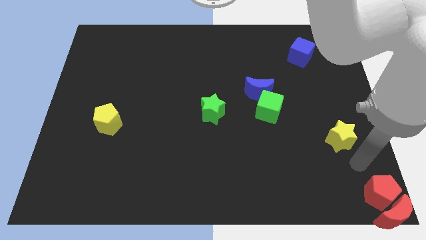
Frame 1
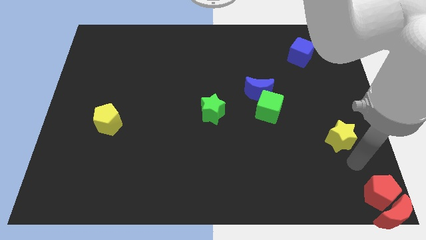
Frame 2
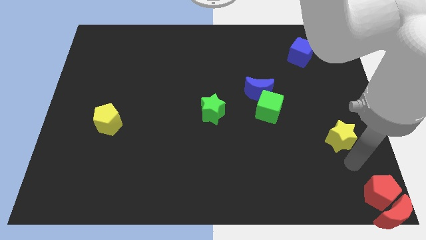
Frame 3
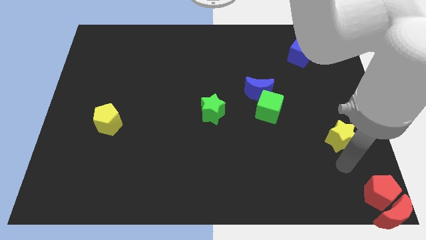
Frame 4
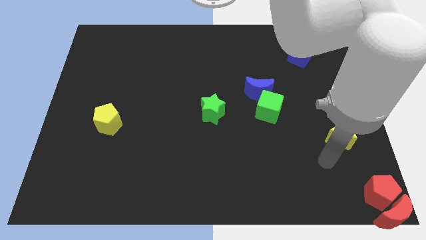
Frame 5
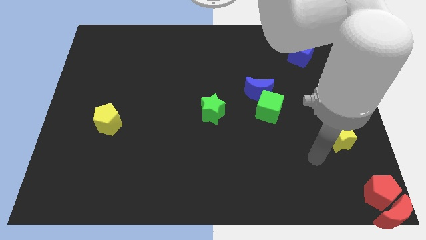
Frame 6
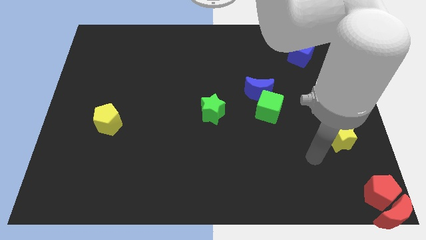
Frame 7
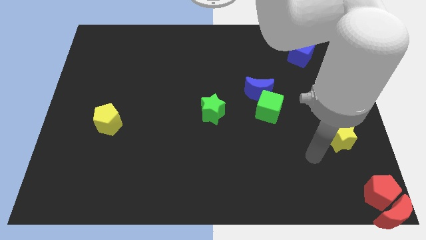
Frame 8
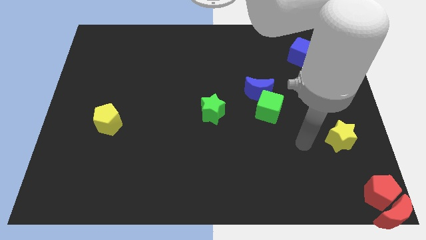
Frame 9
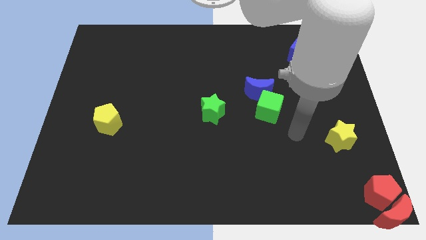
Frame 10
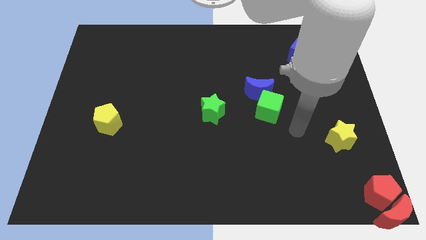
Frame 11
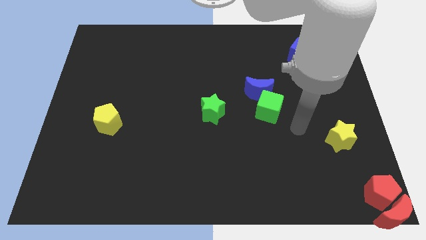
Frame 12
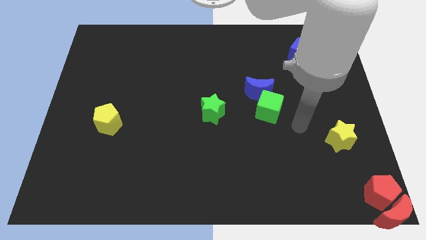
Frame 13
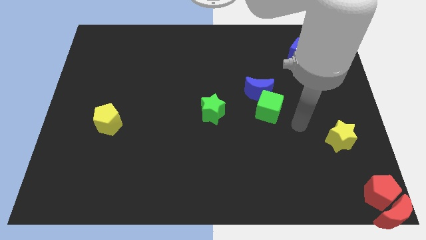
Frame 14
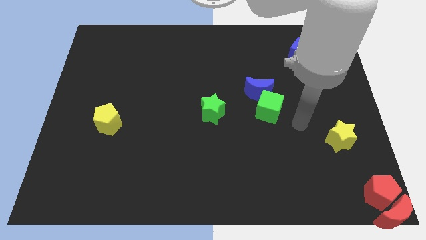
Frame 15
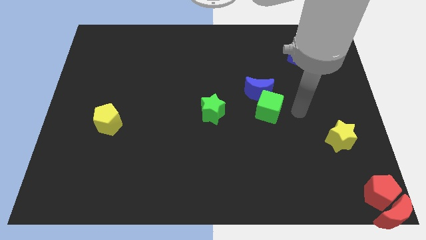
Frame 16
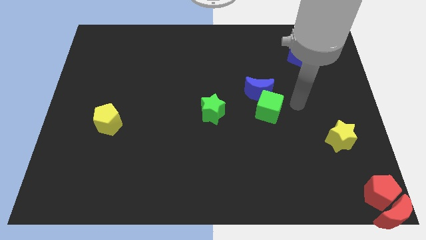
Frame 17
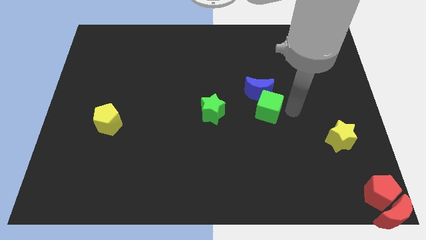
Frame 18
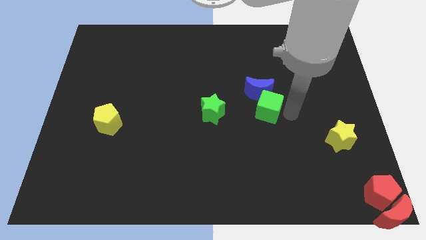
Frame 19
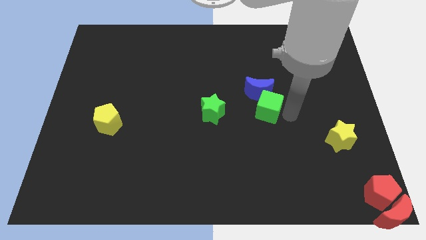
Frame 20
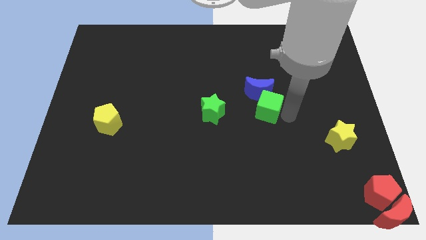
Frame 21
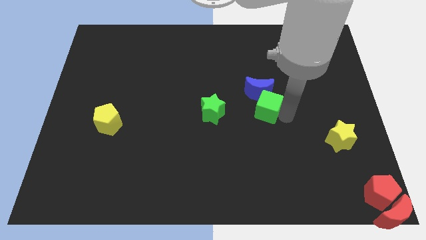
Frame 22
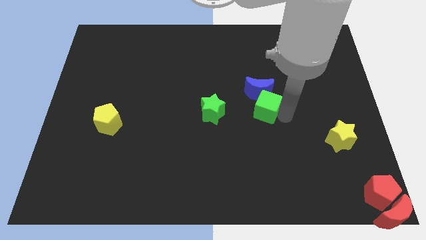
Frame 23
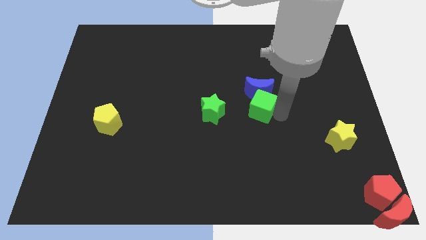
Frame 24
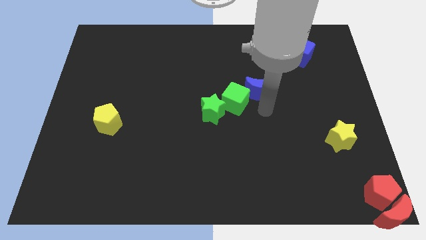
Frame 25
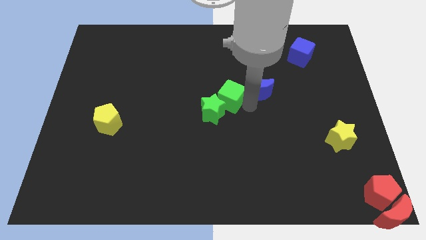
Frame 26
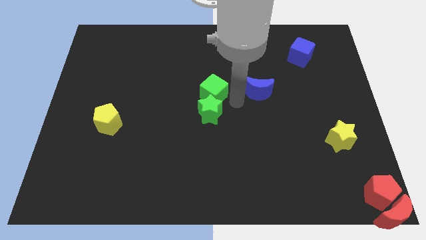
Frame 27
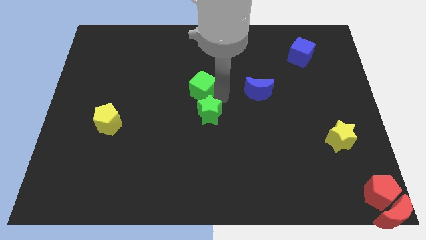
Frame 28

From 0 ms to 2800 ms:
move the green cube to the top of the green star

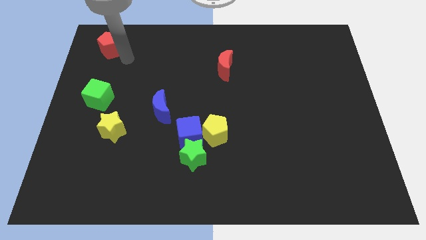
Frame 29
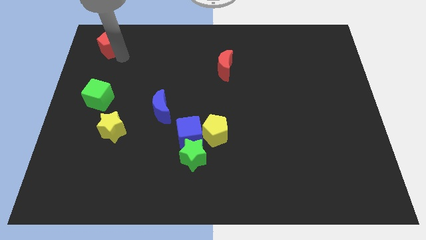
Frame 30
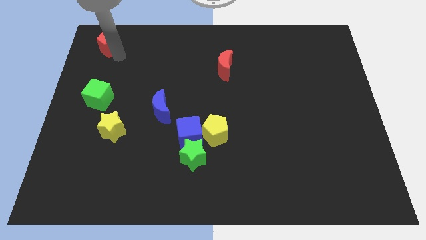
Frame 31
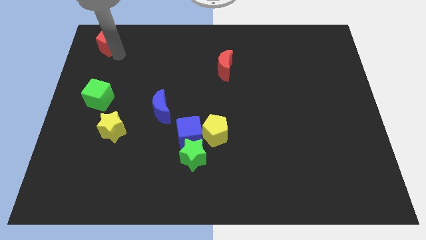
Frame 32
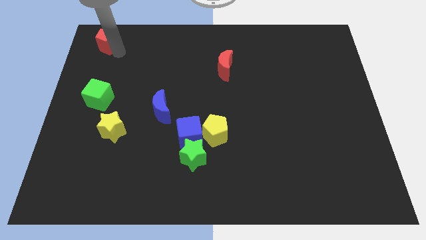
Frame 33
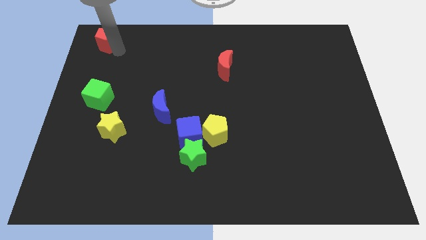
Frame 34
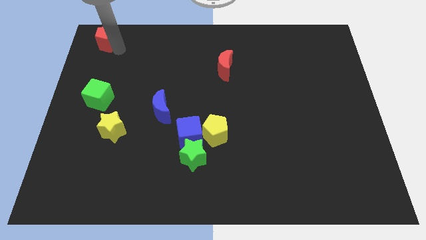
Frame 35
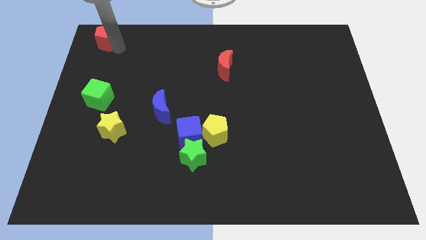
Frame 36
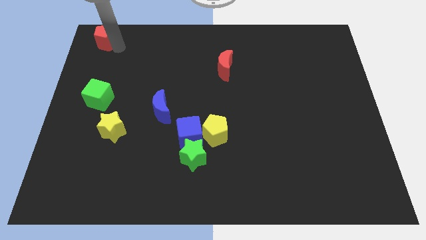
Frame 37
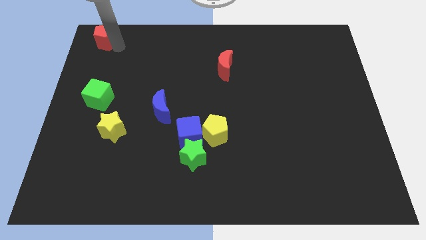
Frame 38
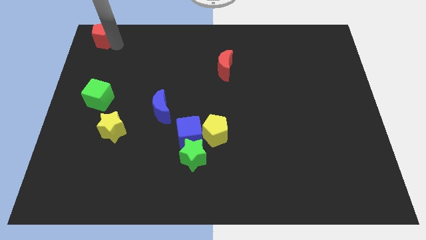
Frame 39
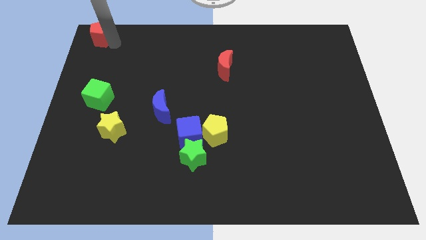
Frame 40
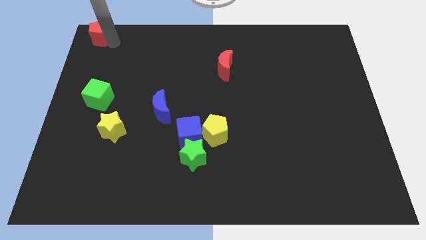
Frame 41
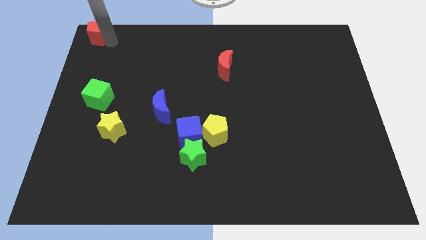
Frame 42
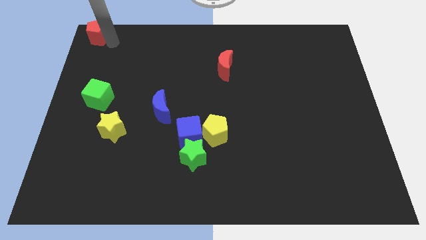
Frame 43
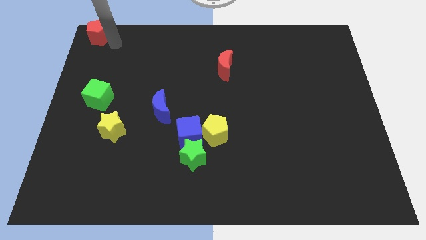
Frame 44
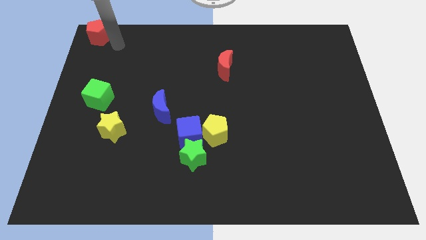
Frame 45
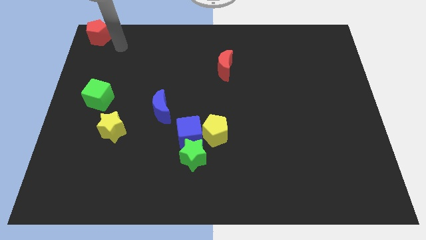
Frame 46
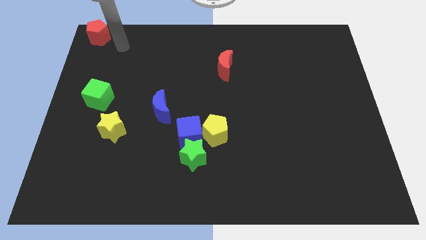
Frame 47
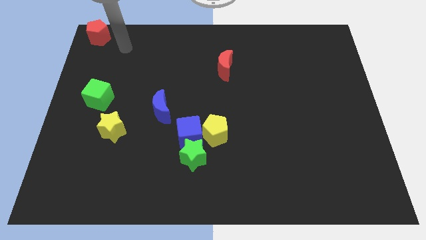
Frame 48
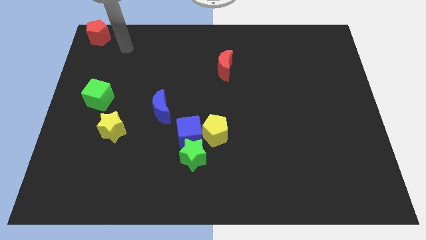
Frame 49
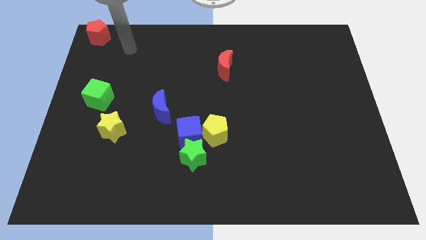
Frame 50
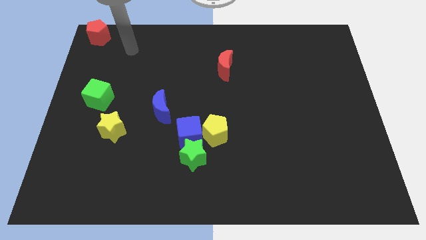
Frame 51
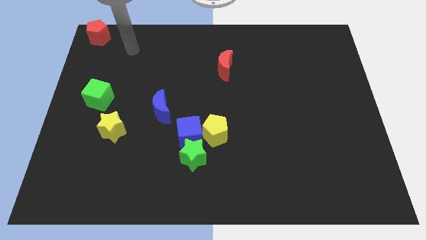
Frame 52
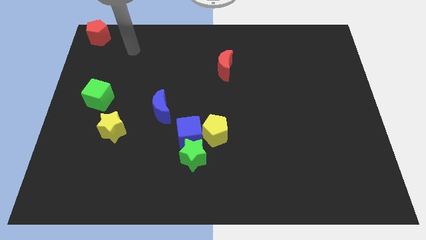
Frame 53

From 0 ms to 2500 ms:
push red pentagon to the top left corner

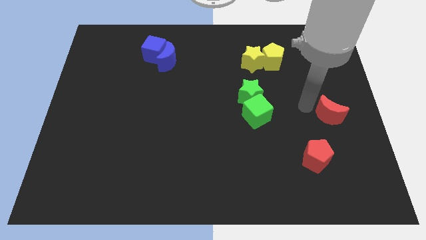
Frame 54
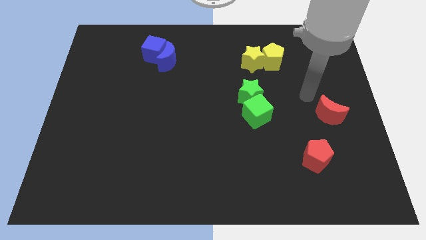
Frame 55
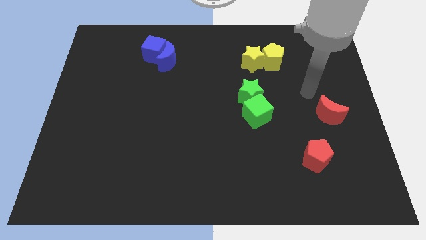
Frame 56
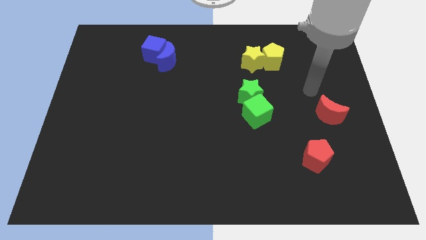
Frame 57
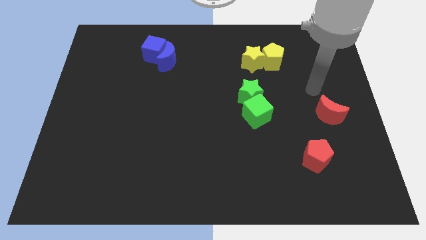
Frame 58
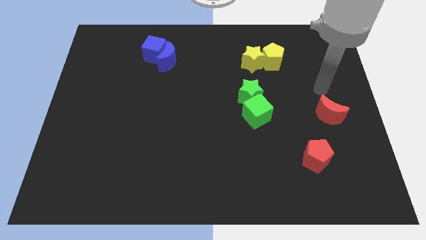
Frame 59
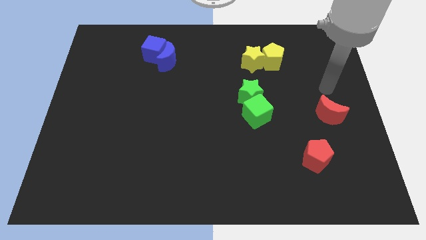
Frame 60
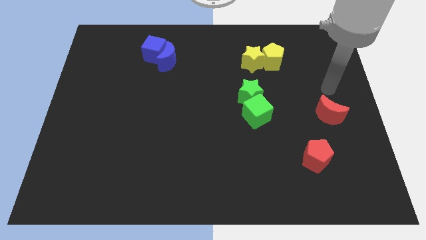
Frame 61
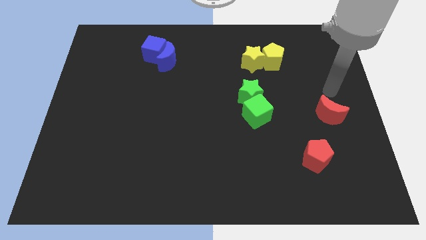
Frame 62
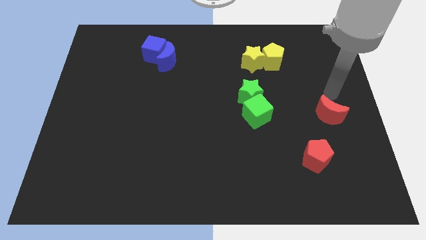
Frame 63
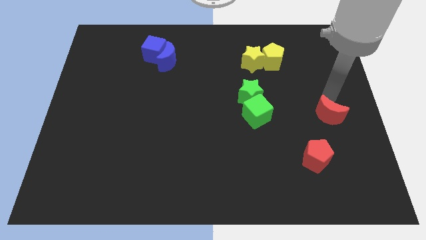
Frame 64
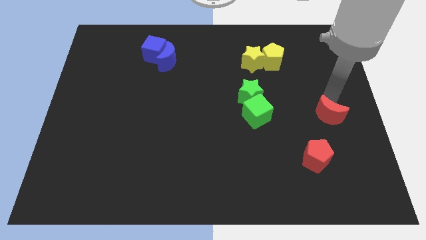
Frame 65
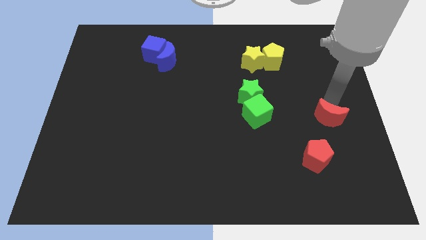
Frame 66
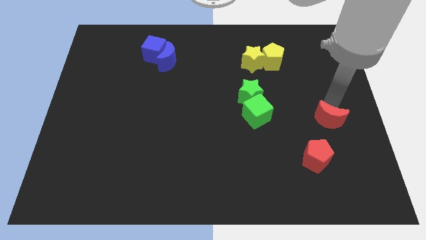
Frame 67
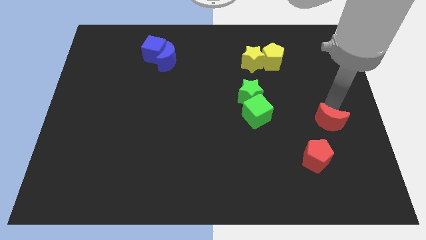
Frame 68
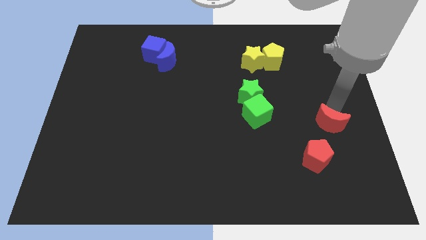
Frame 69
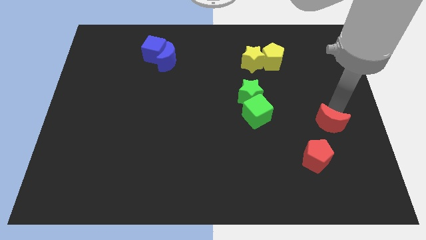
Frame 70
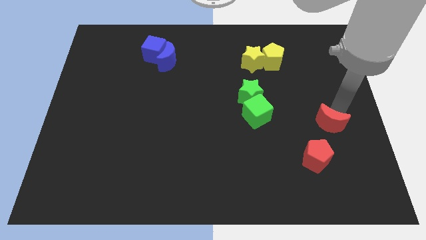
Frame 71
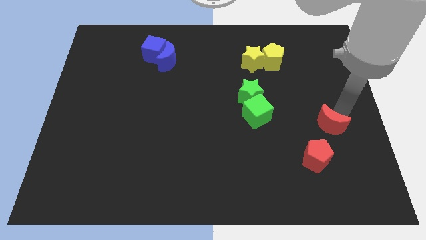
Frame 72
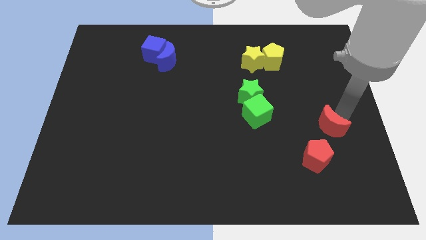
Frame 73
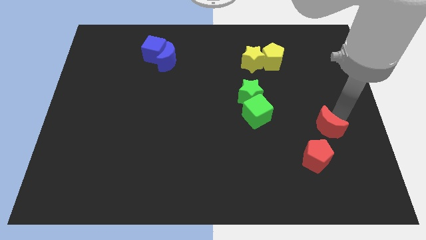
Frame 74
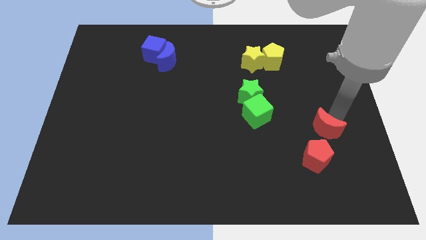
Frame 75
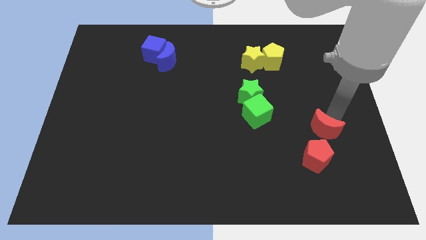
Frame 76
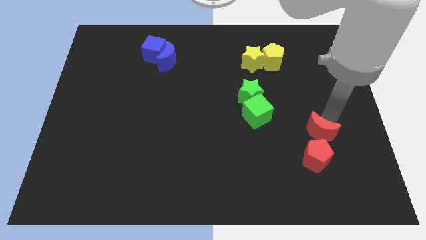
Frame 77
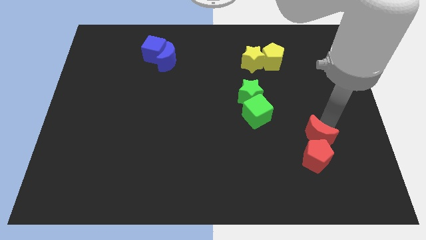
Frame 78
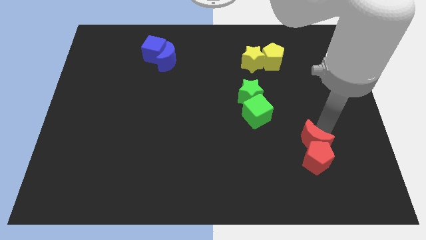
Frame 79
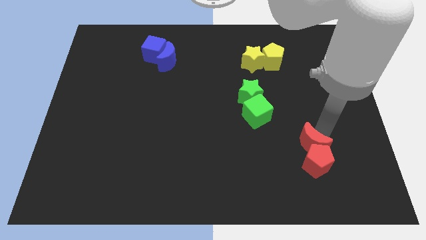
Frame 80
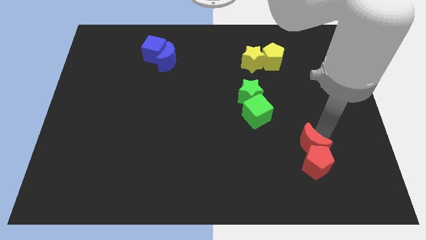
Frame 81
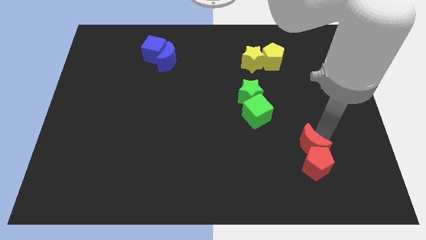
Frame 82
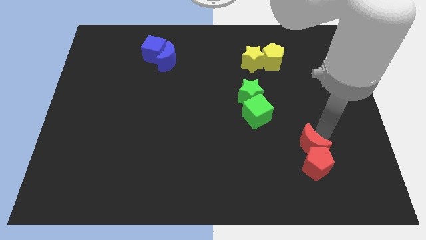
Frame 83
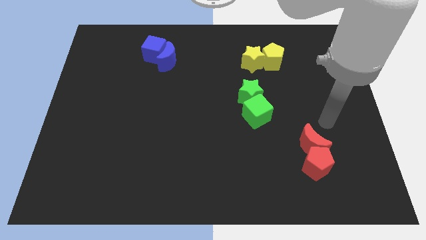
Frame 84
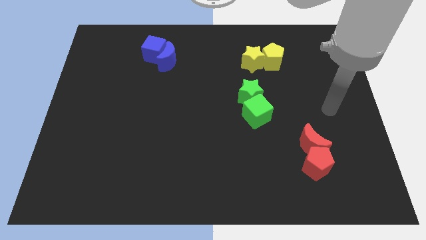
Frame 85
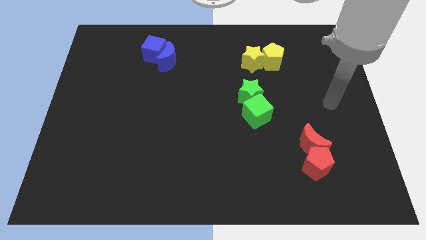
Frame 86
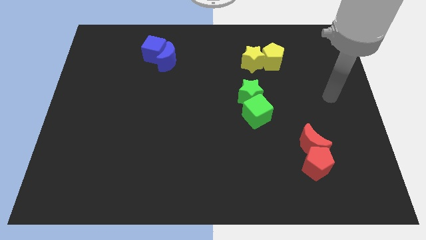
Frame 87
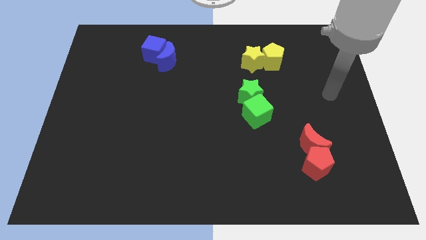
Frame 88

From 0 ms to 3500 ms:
place the red crescent close to the red pentagon

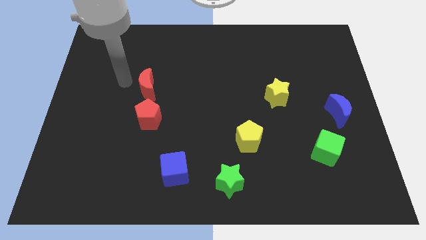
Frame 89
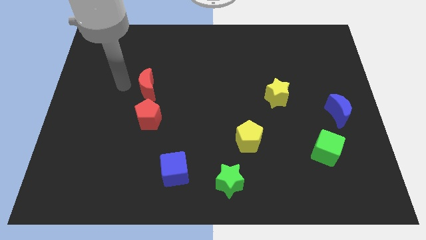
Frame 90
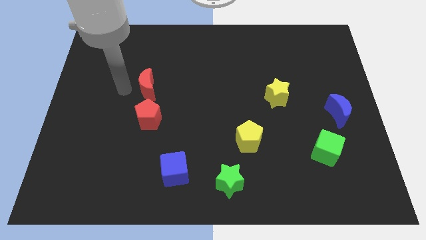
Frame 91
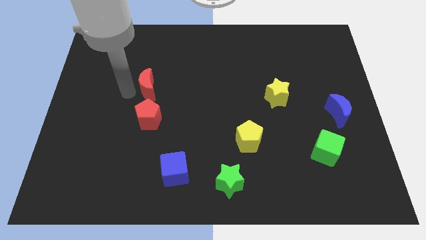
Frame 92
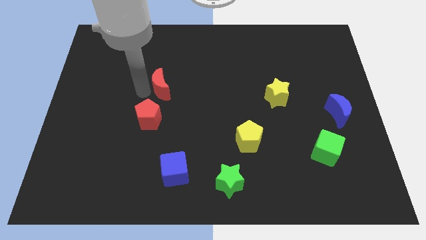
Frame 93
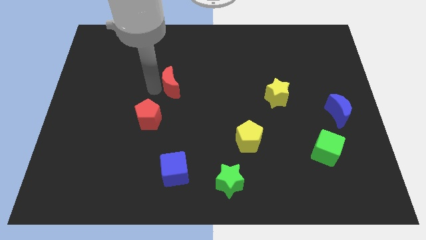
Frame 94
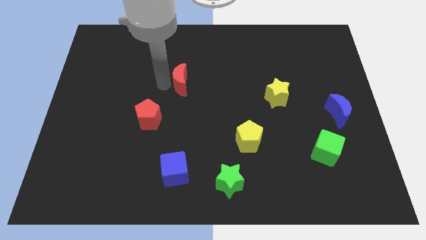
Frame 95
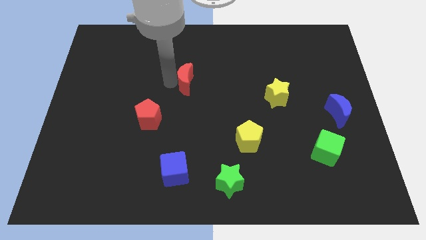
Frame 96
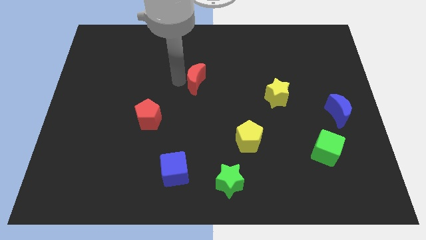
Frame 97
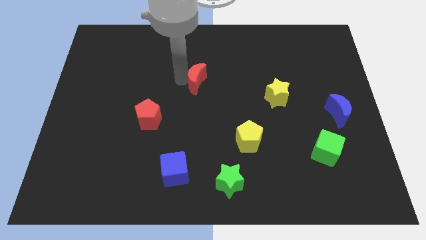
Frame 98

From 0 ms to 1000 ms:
push red crescent away from red pentagon
